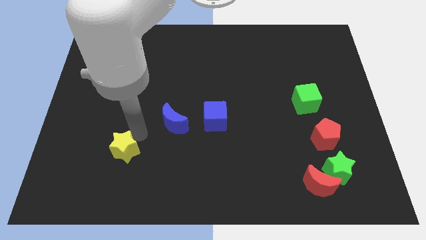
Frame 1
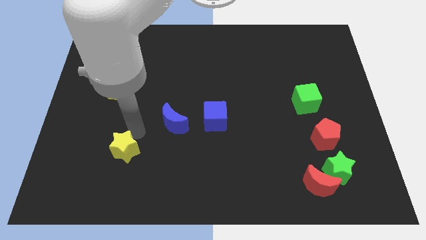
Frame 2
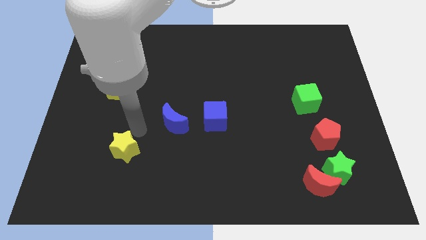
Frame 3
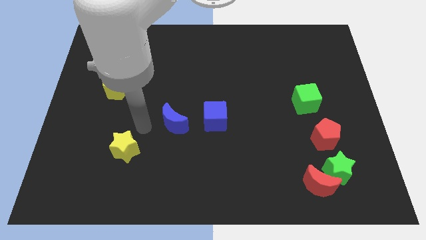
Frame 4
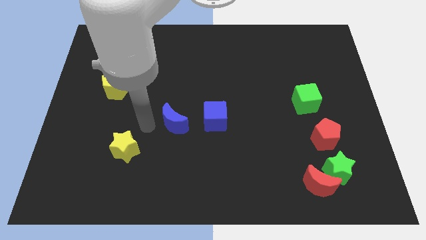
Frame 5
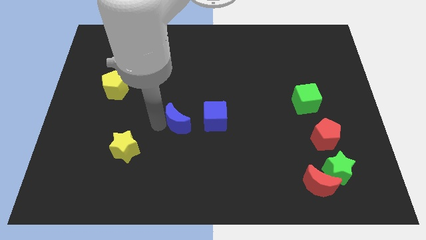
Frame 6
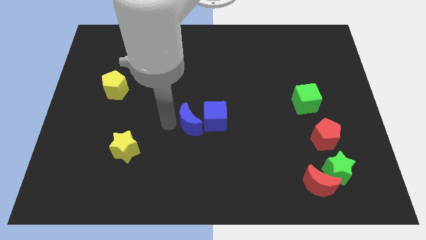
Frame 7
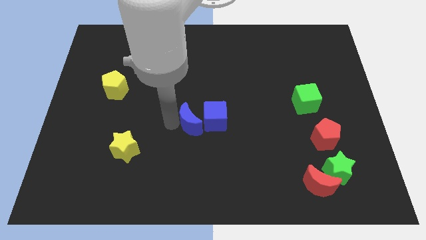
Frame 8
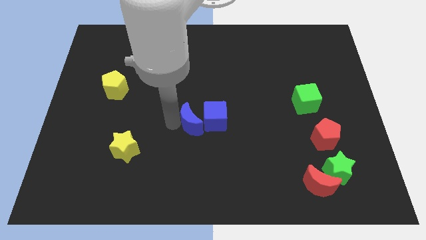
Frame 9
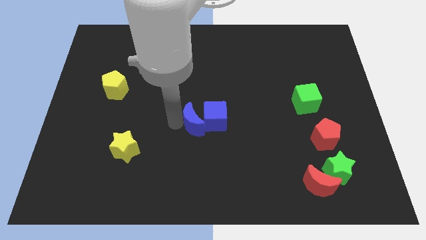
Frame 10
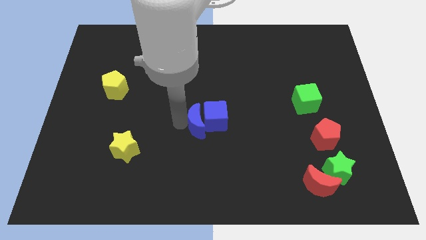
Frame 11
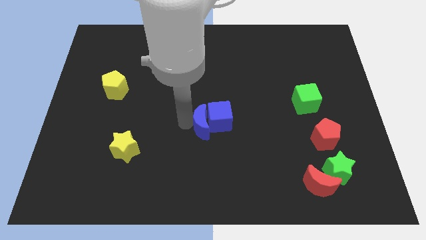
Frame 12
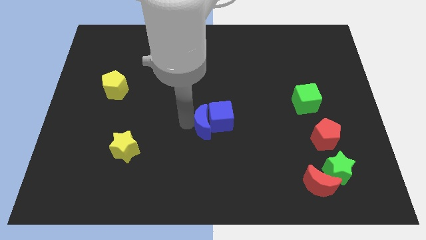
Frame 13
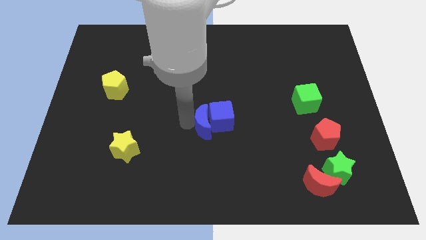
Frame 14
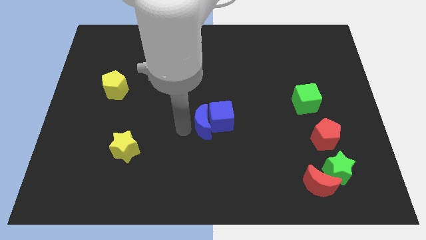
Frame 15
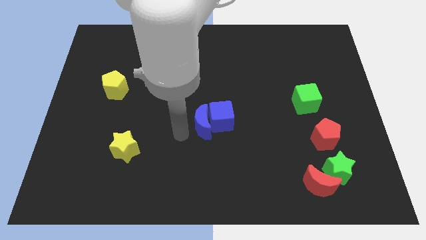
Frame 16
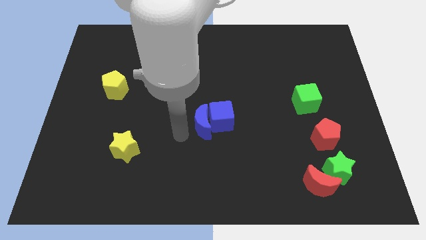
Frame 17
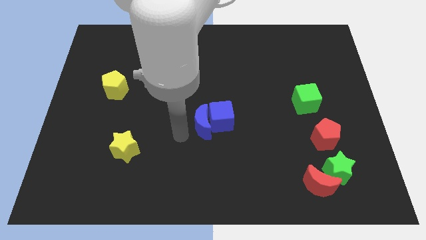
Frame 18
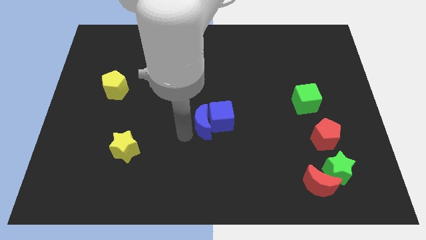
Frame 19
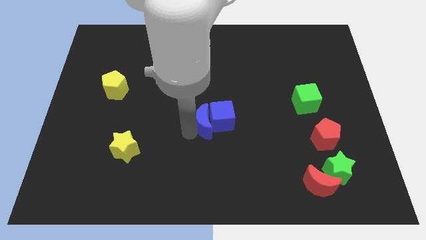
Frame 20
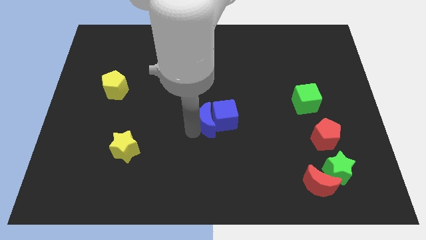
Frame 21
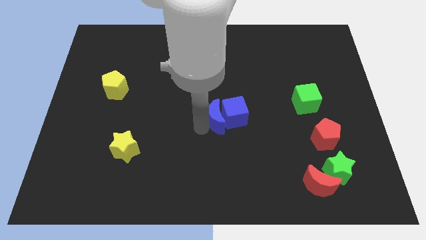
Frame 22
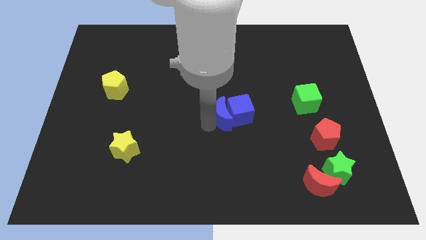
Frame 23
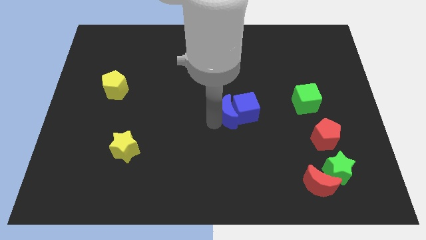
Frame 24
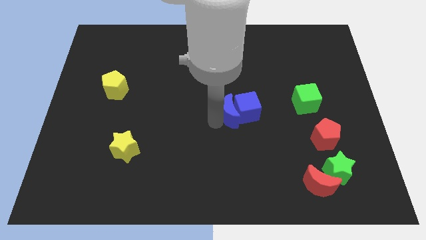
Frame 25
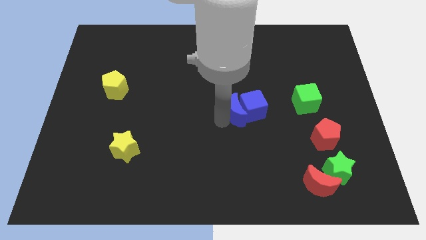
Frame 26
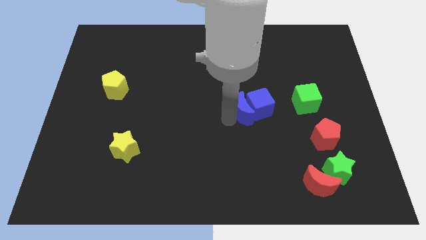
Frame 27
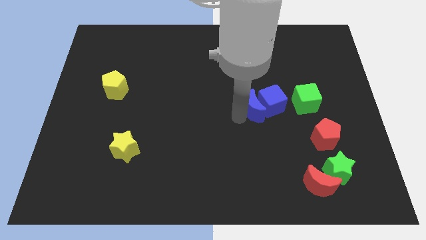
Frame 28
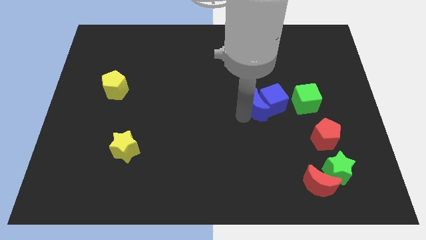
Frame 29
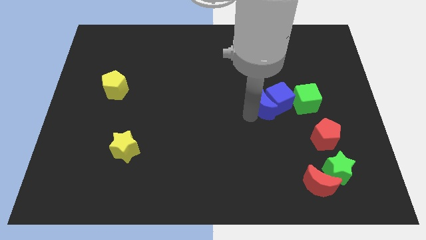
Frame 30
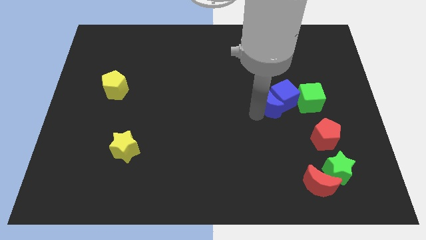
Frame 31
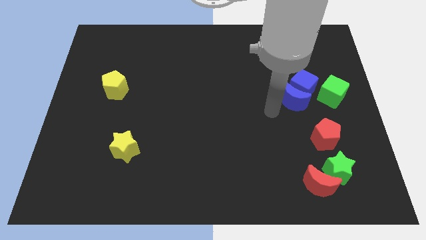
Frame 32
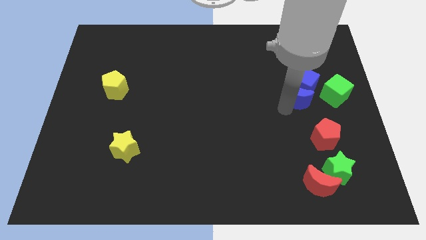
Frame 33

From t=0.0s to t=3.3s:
push blue cubes in to green cube

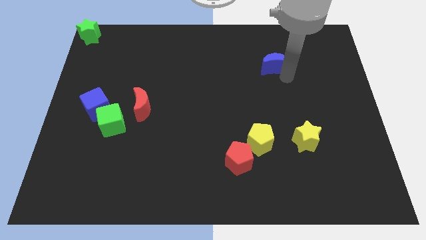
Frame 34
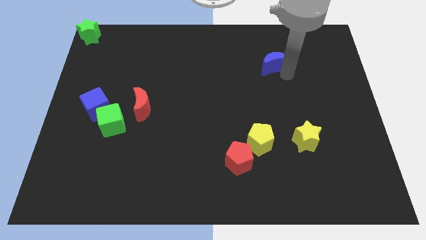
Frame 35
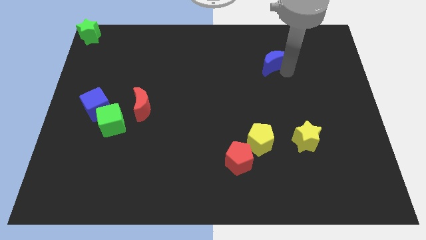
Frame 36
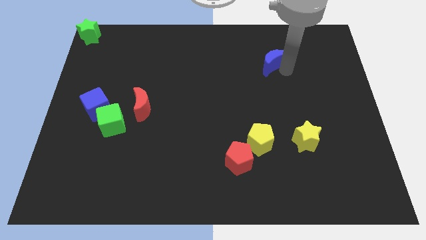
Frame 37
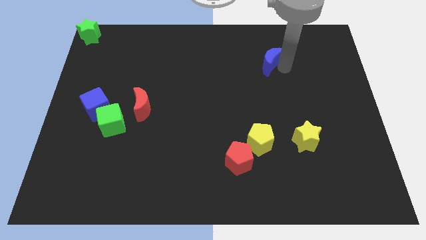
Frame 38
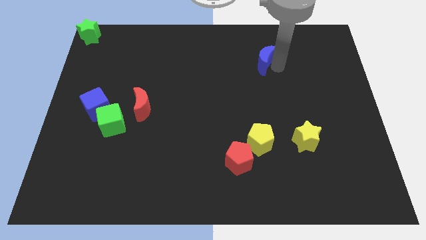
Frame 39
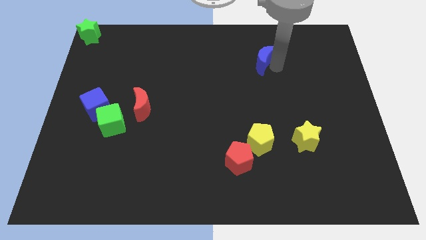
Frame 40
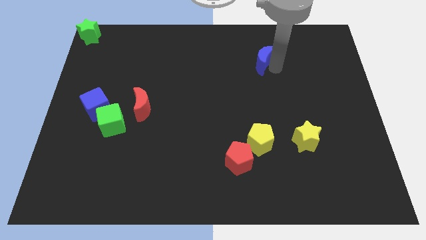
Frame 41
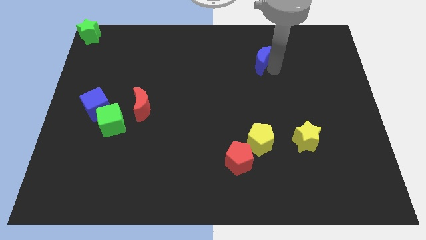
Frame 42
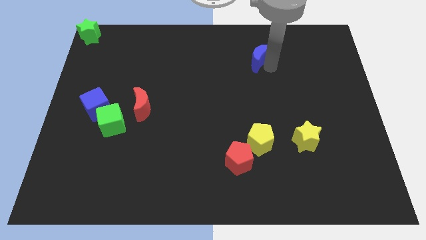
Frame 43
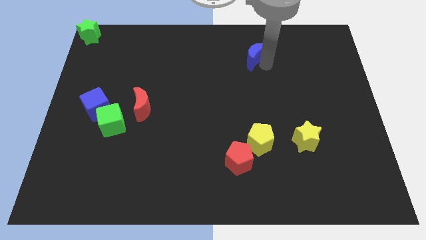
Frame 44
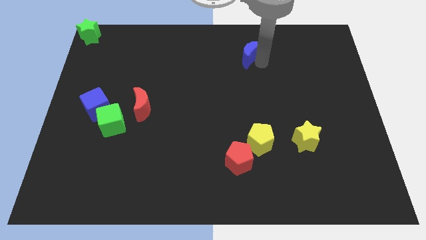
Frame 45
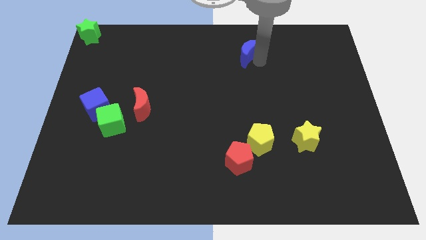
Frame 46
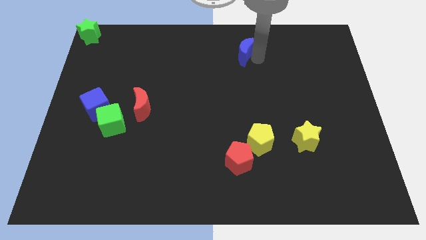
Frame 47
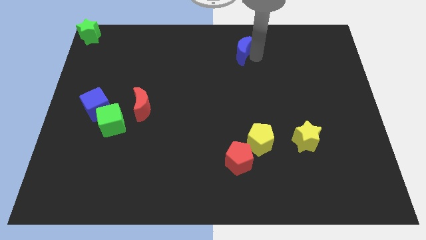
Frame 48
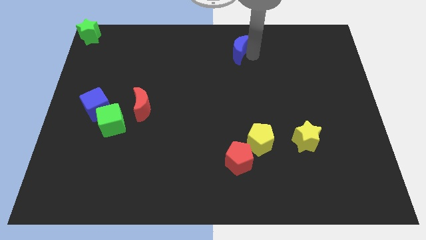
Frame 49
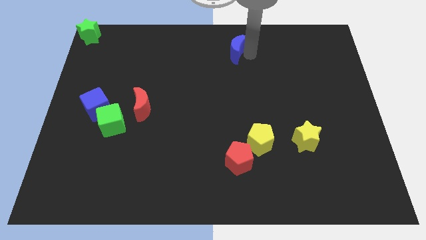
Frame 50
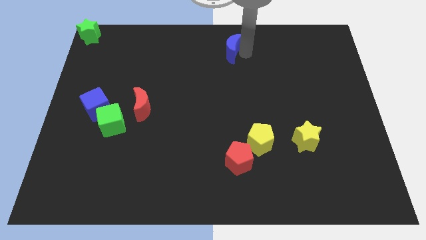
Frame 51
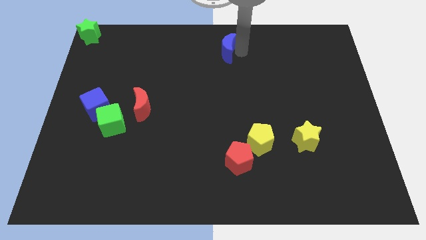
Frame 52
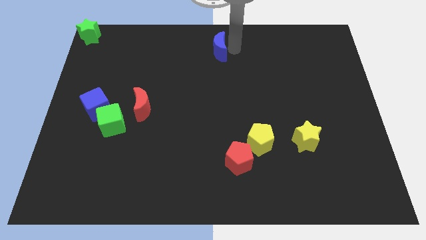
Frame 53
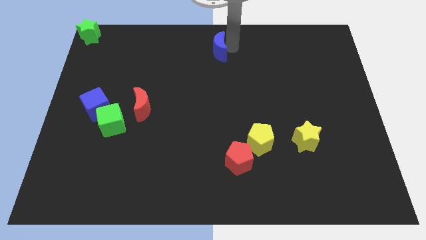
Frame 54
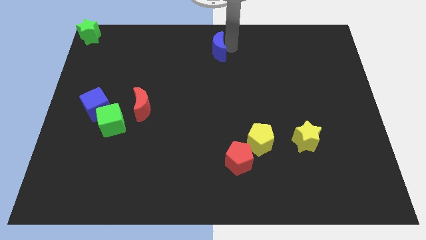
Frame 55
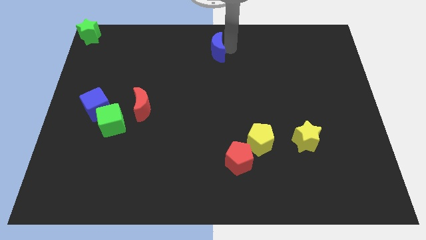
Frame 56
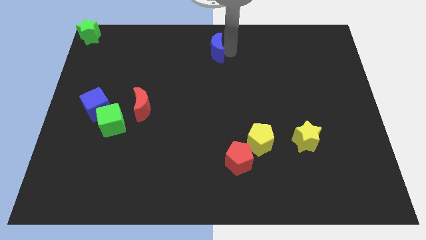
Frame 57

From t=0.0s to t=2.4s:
place the blue moon at the top center of the board

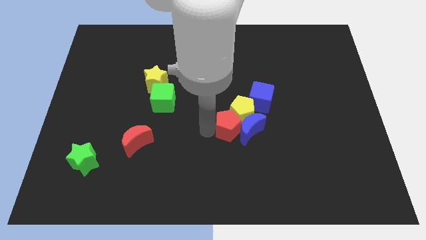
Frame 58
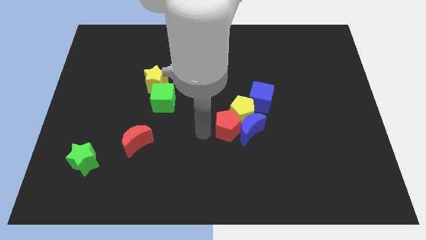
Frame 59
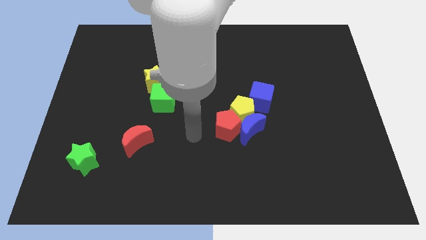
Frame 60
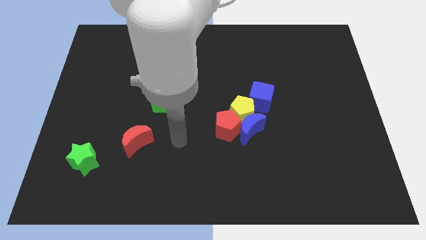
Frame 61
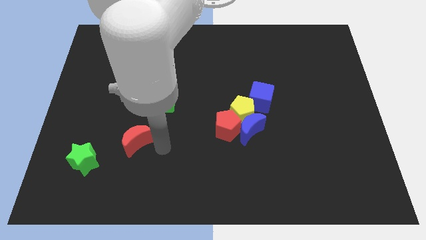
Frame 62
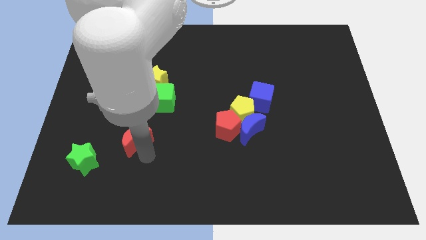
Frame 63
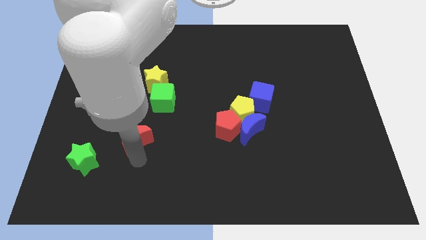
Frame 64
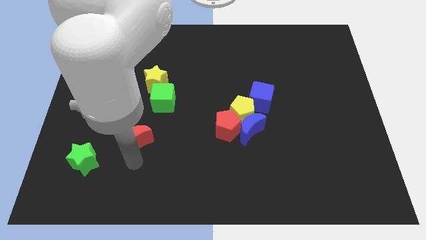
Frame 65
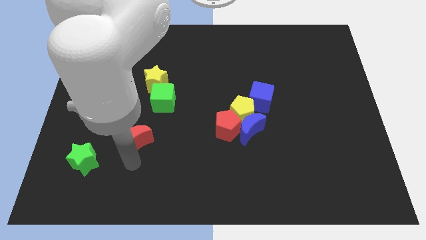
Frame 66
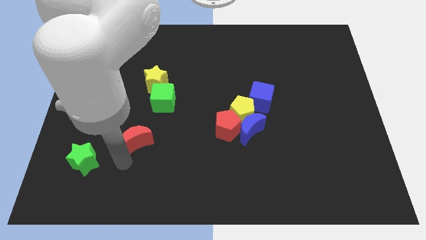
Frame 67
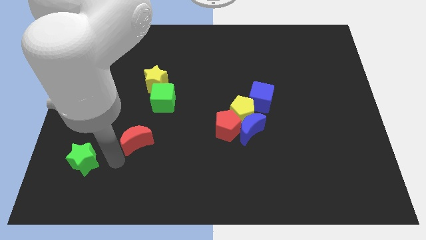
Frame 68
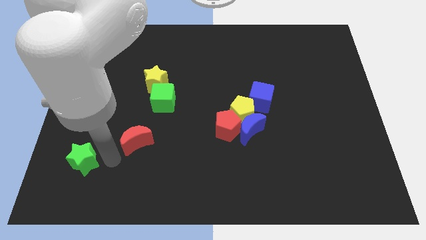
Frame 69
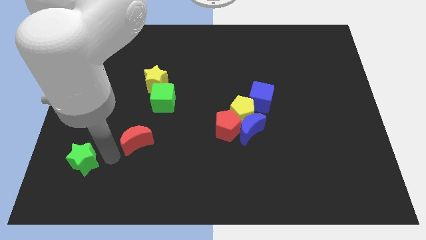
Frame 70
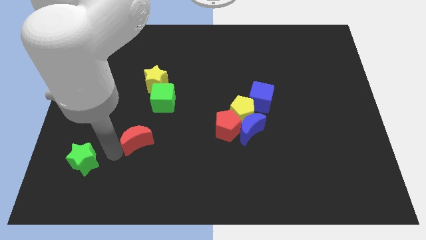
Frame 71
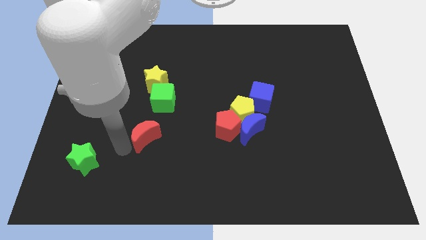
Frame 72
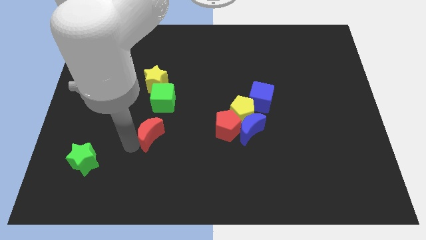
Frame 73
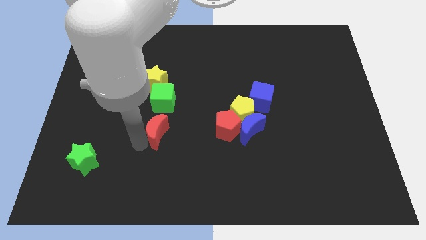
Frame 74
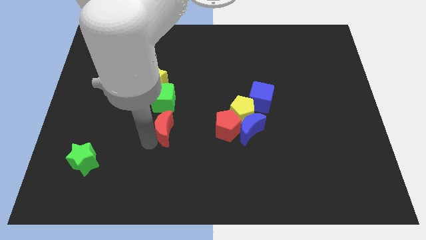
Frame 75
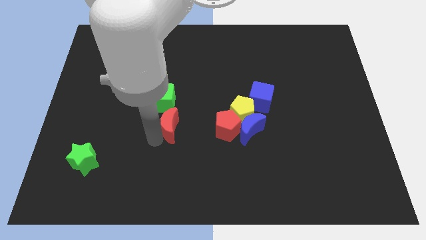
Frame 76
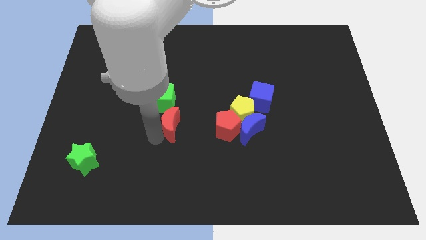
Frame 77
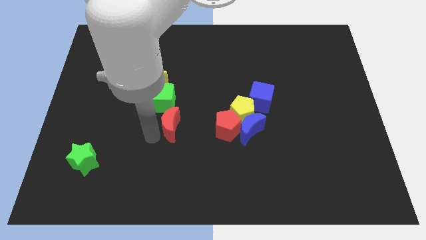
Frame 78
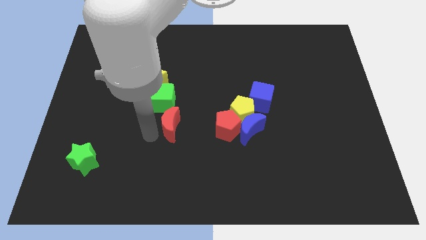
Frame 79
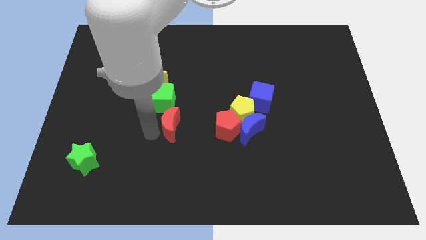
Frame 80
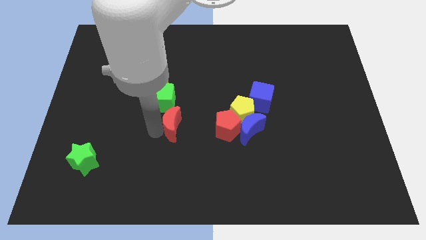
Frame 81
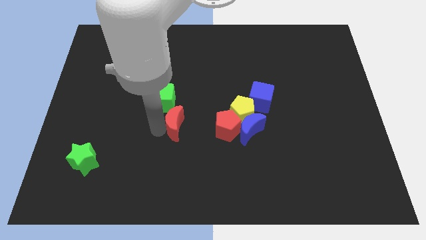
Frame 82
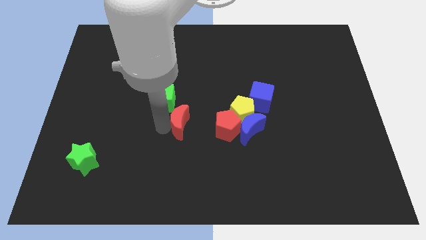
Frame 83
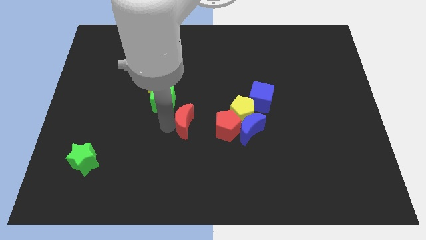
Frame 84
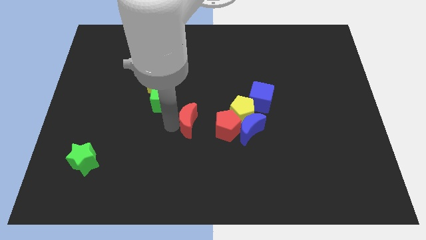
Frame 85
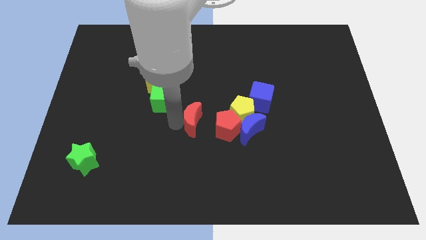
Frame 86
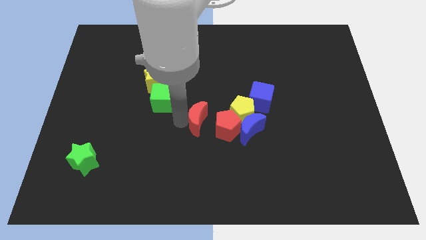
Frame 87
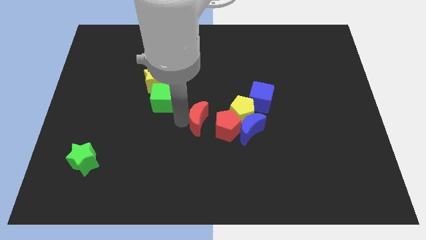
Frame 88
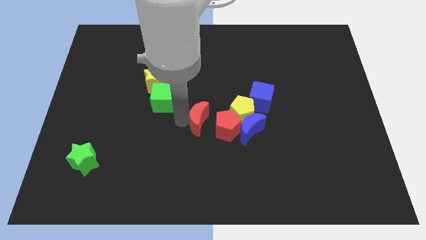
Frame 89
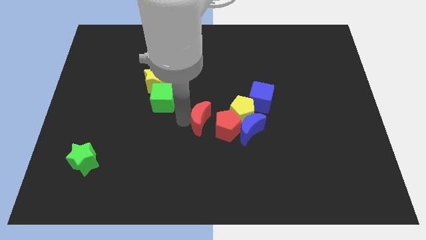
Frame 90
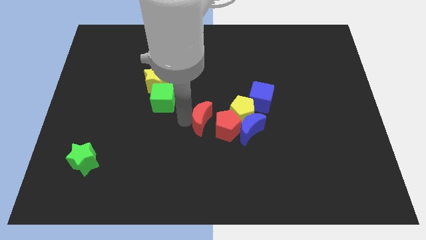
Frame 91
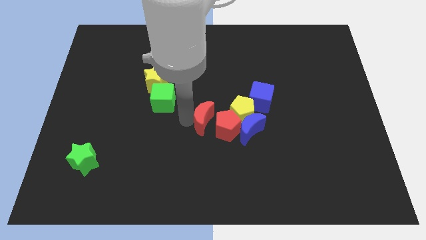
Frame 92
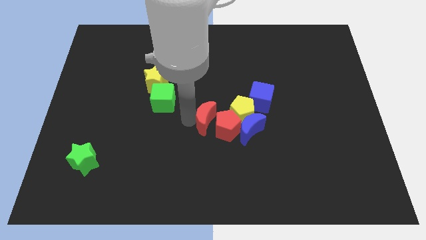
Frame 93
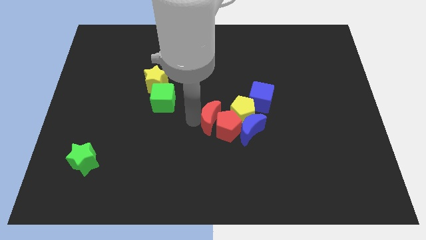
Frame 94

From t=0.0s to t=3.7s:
push the red crescent into the red pentagon
